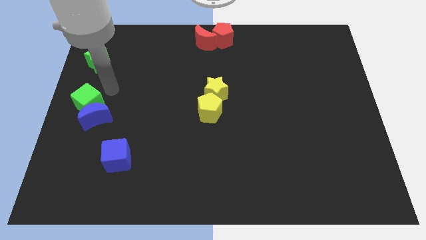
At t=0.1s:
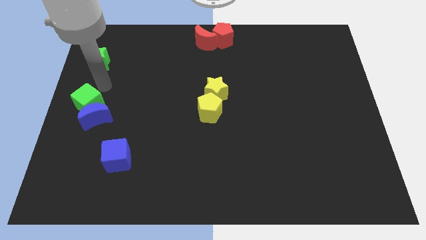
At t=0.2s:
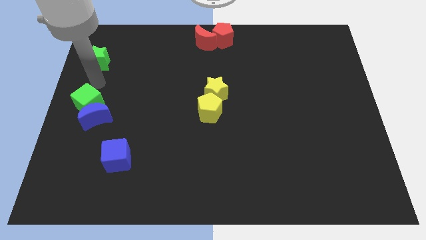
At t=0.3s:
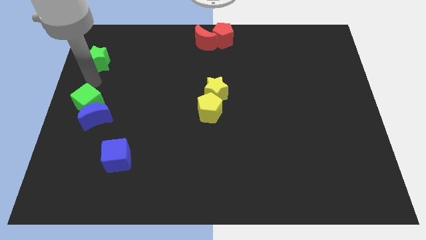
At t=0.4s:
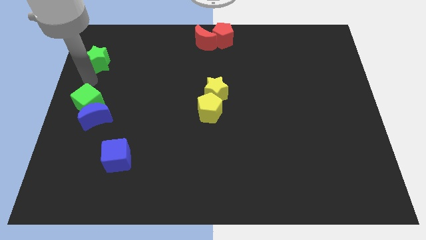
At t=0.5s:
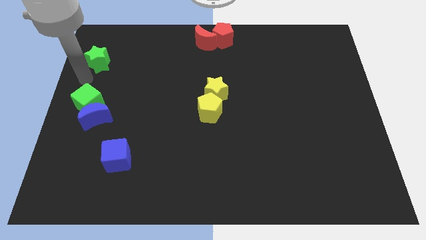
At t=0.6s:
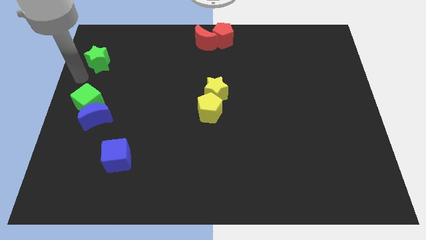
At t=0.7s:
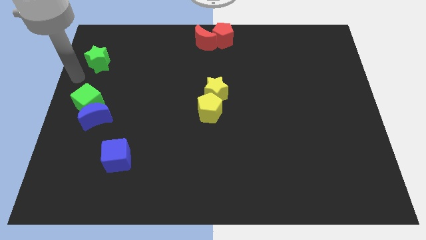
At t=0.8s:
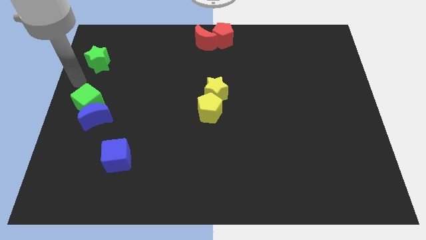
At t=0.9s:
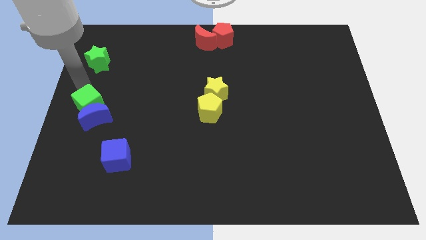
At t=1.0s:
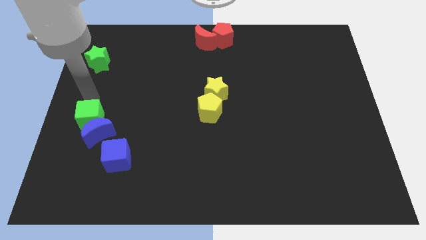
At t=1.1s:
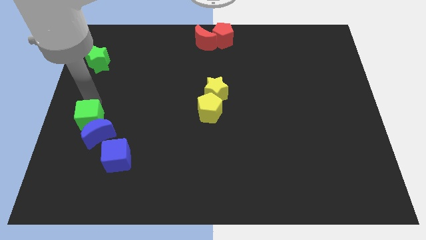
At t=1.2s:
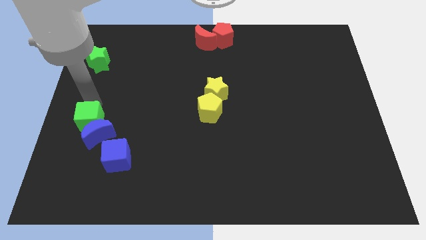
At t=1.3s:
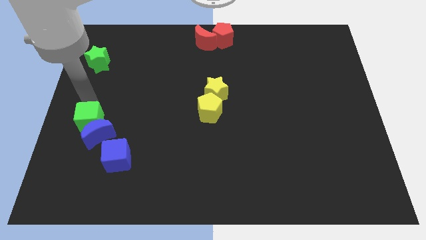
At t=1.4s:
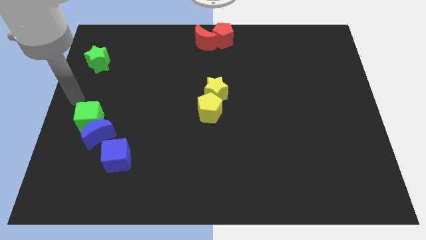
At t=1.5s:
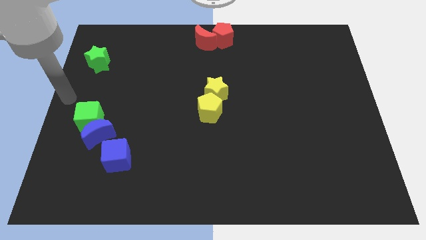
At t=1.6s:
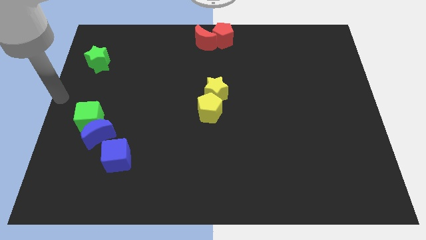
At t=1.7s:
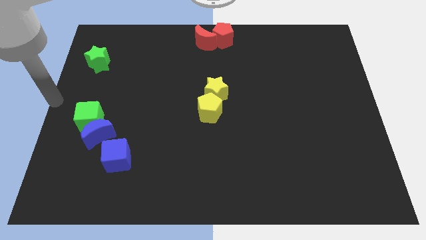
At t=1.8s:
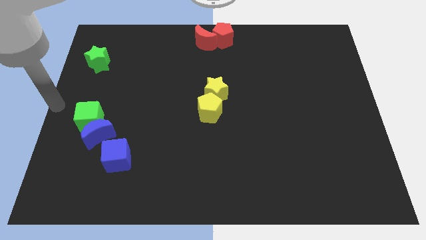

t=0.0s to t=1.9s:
push the green cube into the blue crescent diagonally from the top

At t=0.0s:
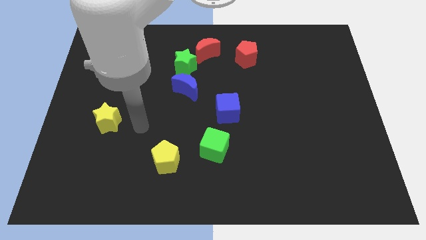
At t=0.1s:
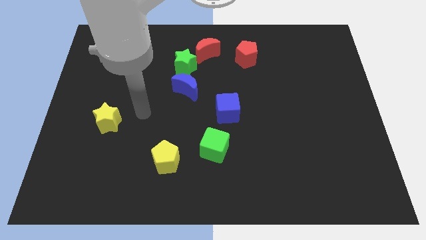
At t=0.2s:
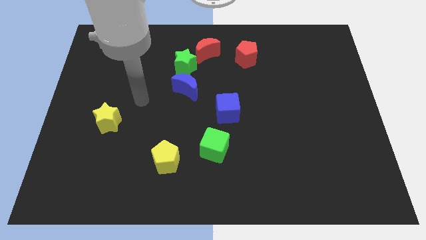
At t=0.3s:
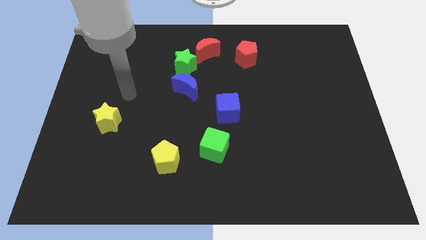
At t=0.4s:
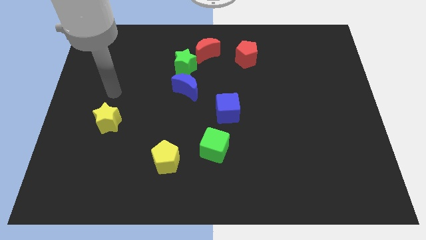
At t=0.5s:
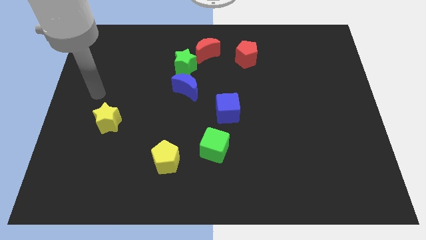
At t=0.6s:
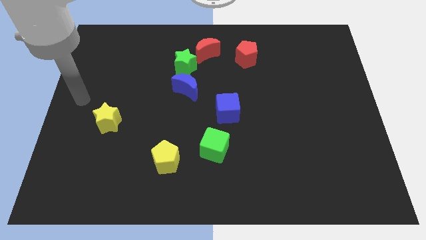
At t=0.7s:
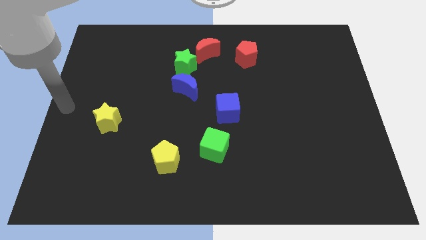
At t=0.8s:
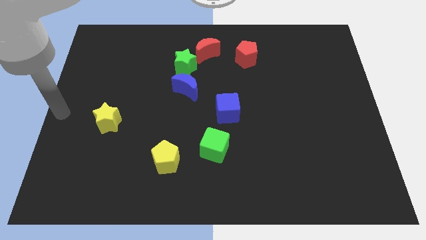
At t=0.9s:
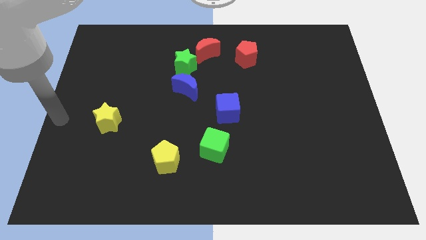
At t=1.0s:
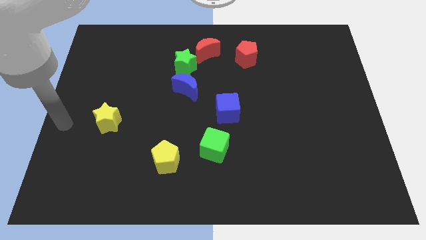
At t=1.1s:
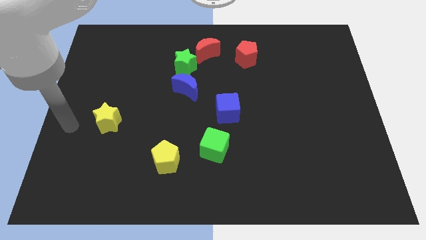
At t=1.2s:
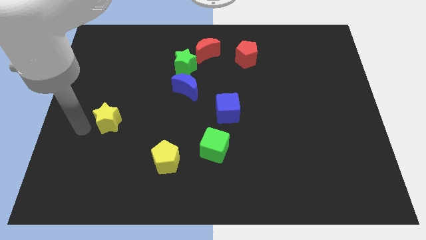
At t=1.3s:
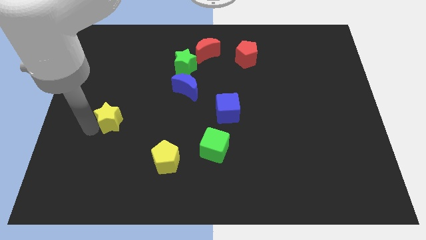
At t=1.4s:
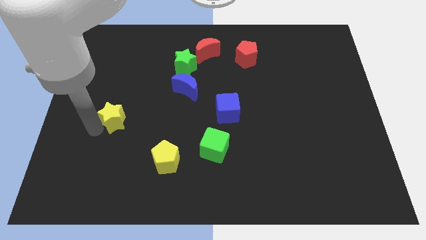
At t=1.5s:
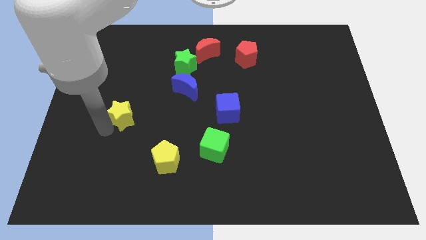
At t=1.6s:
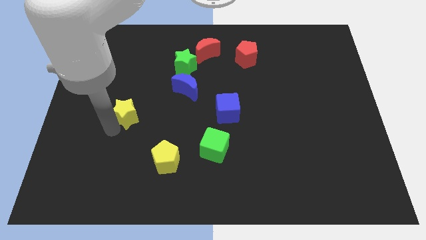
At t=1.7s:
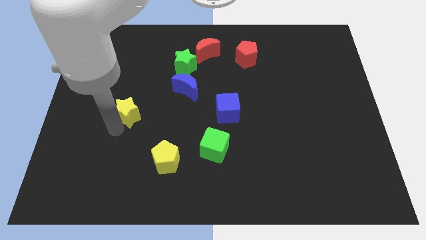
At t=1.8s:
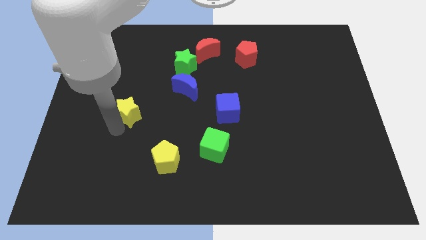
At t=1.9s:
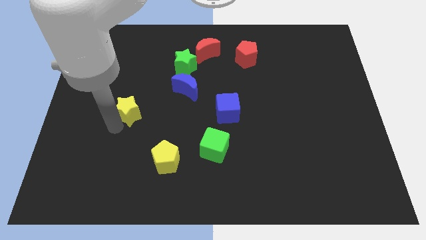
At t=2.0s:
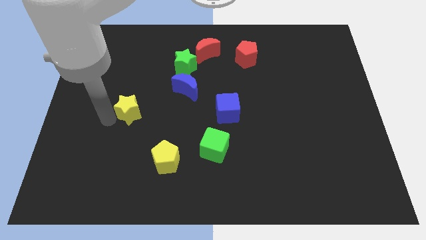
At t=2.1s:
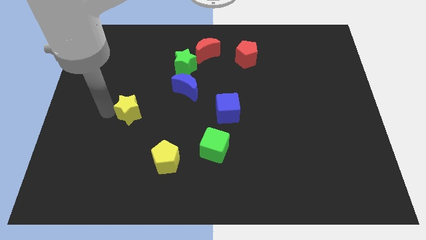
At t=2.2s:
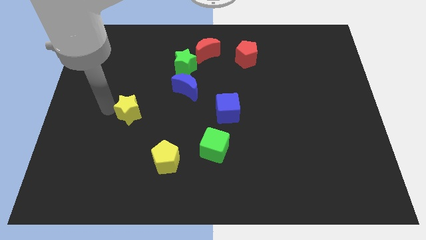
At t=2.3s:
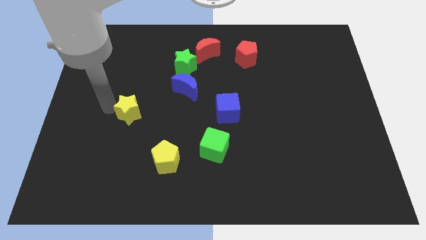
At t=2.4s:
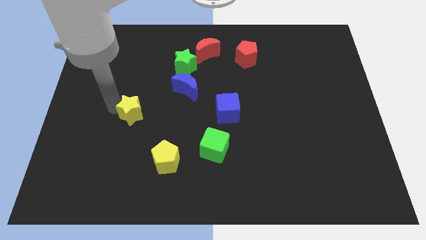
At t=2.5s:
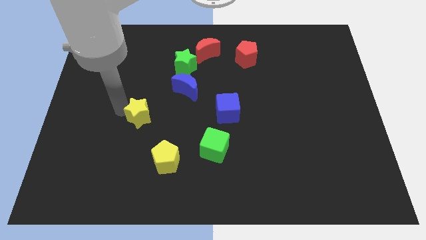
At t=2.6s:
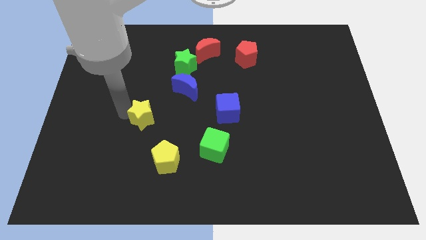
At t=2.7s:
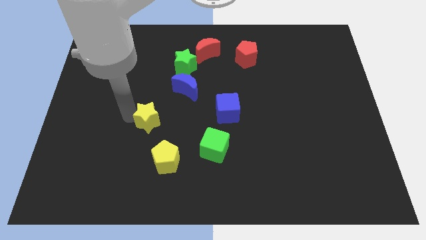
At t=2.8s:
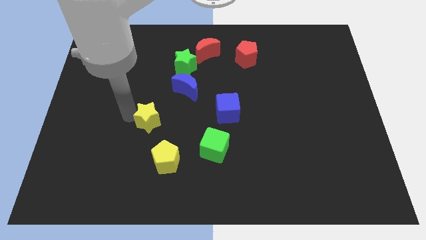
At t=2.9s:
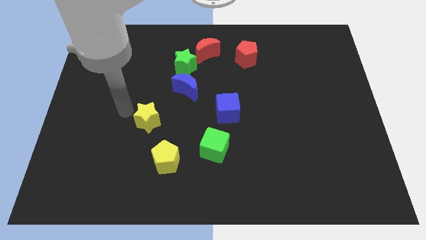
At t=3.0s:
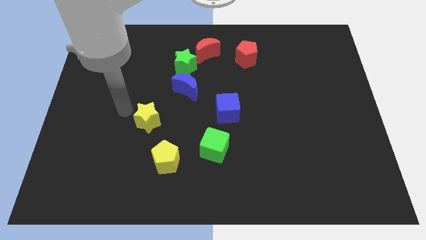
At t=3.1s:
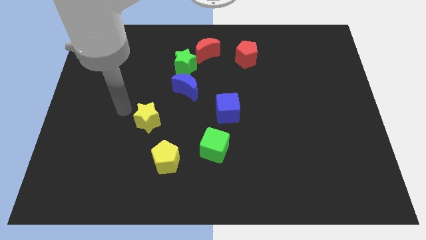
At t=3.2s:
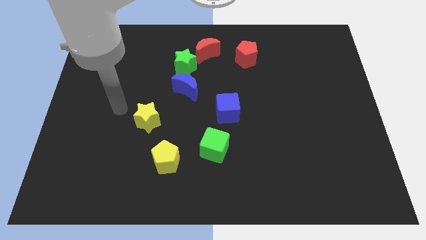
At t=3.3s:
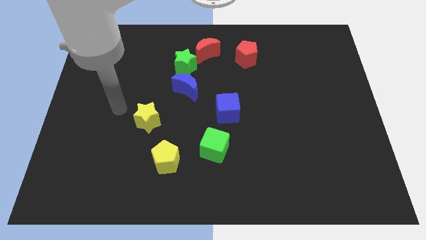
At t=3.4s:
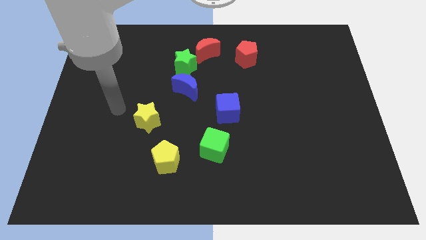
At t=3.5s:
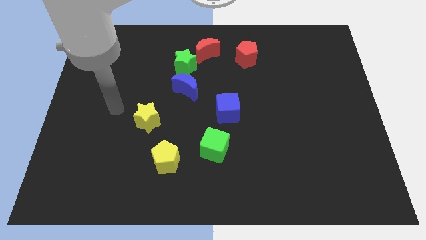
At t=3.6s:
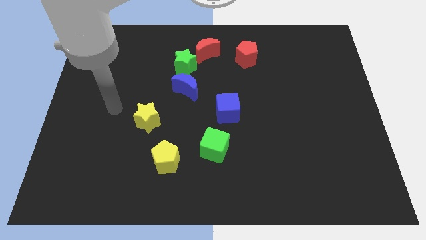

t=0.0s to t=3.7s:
push the yellow star close to the yellow pentagon

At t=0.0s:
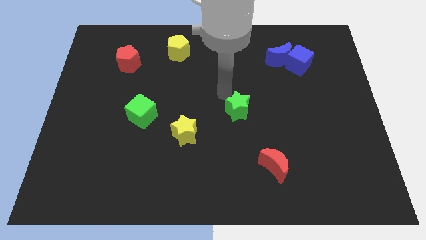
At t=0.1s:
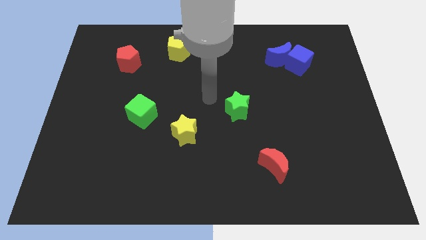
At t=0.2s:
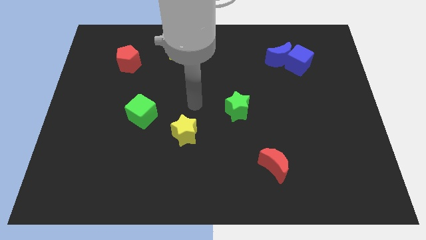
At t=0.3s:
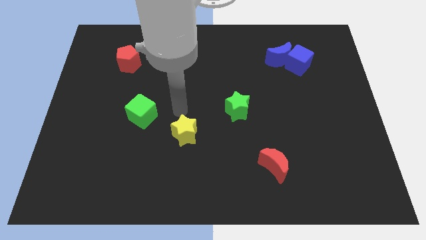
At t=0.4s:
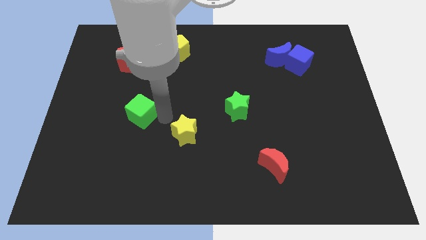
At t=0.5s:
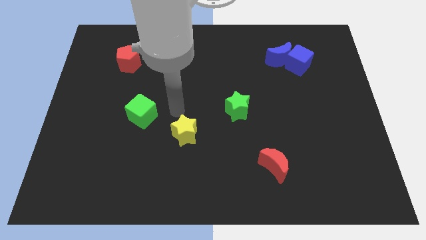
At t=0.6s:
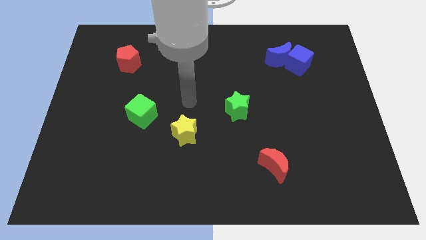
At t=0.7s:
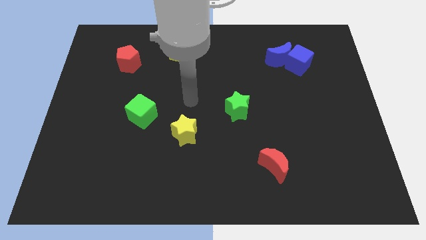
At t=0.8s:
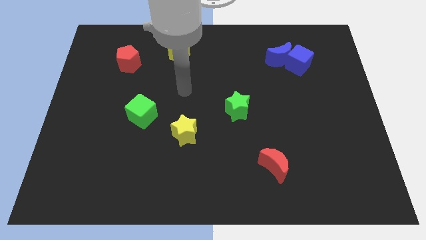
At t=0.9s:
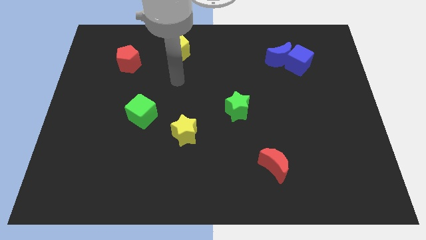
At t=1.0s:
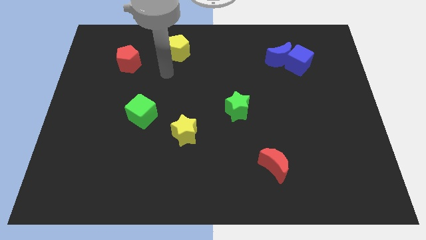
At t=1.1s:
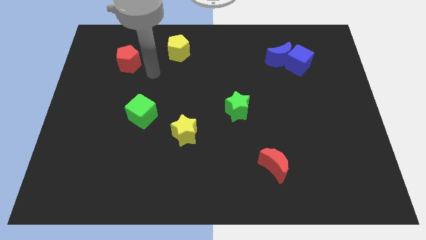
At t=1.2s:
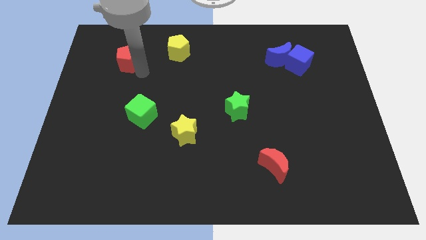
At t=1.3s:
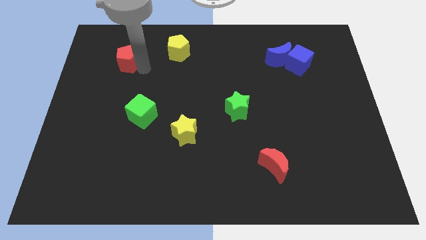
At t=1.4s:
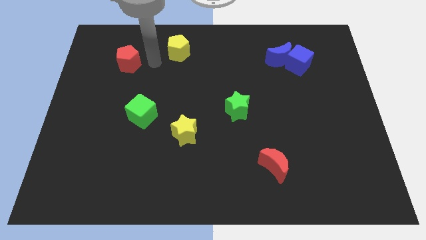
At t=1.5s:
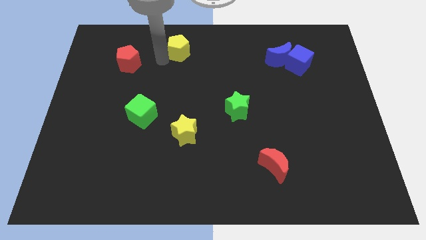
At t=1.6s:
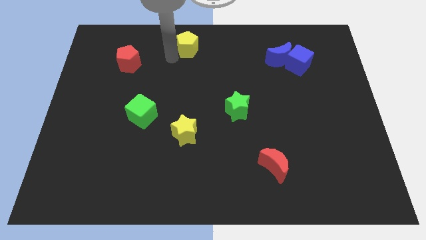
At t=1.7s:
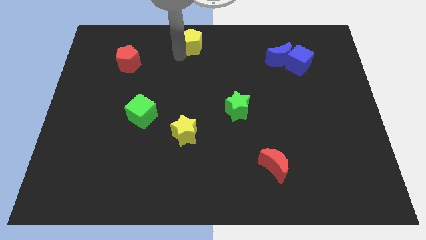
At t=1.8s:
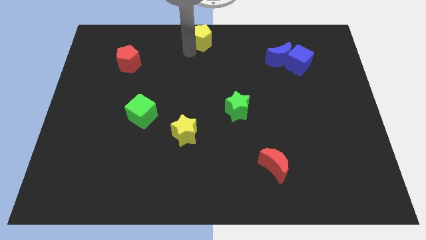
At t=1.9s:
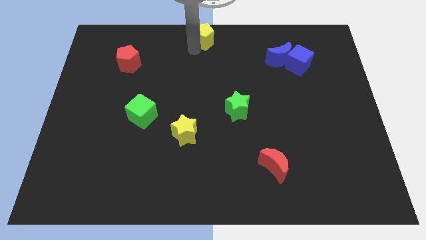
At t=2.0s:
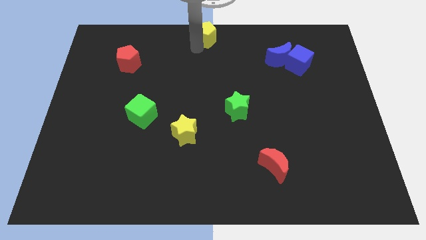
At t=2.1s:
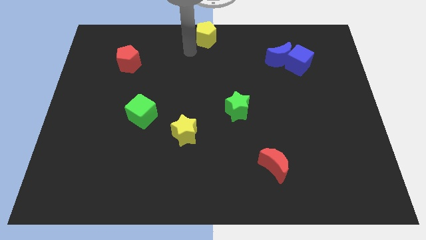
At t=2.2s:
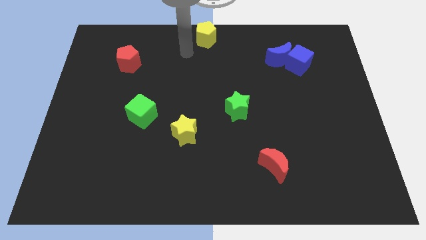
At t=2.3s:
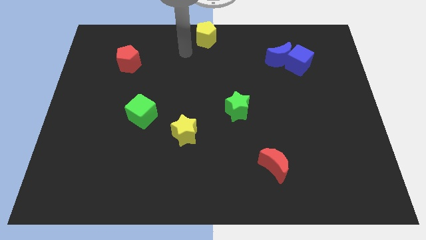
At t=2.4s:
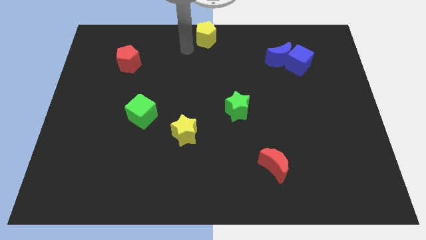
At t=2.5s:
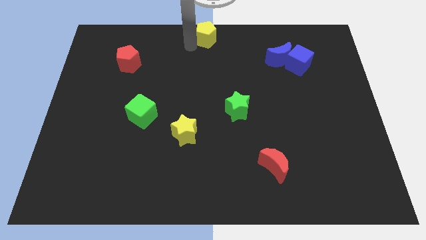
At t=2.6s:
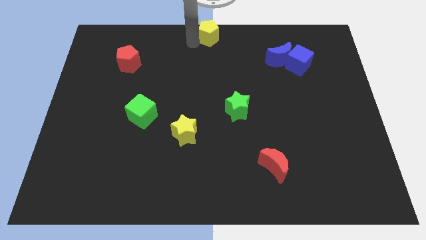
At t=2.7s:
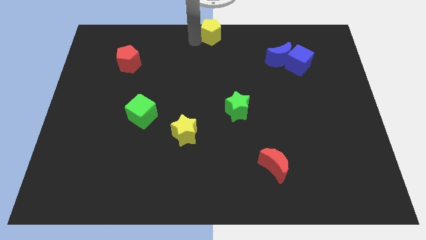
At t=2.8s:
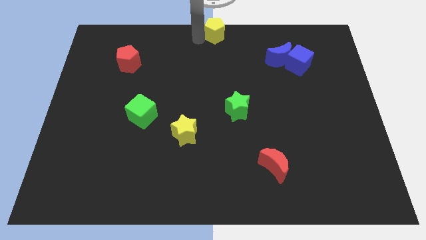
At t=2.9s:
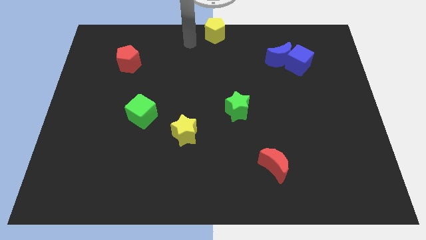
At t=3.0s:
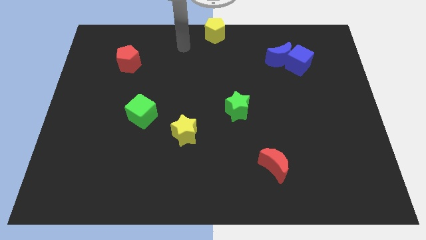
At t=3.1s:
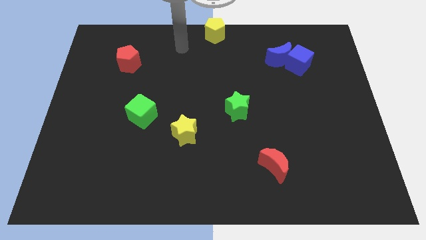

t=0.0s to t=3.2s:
put the yellow pentagon at the top center of the board
